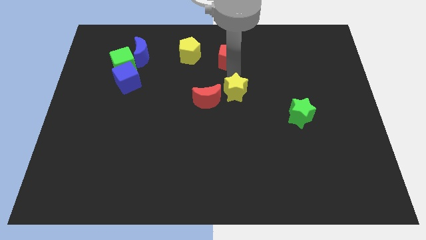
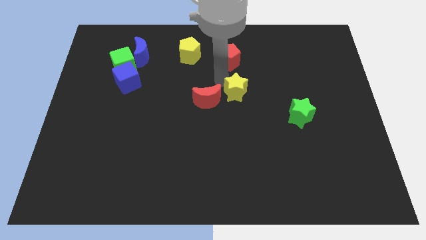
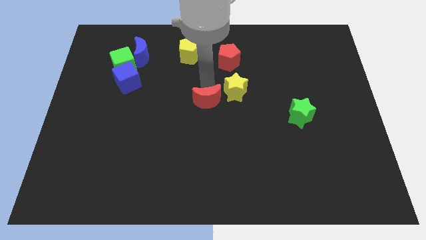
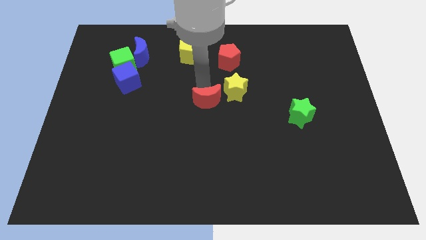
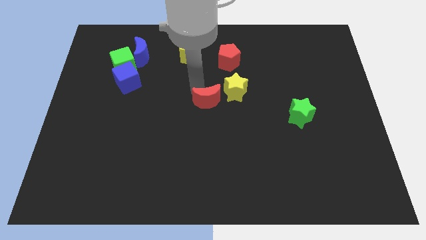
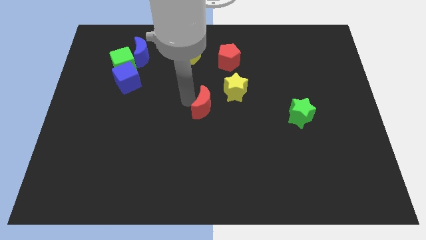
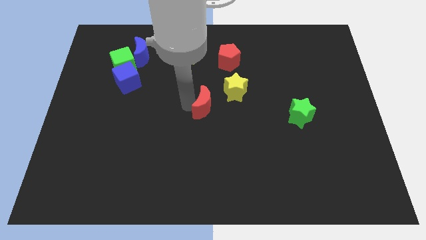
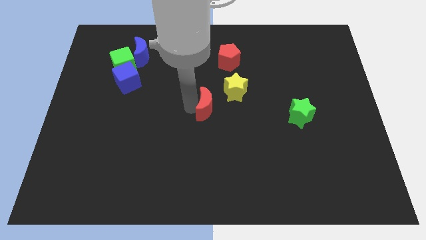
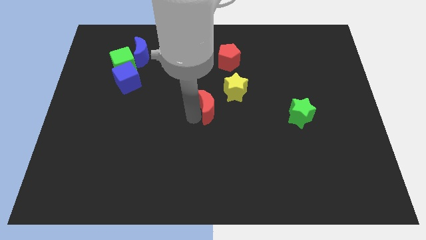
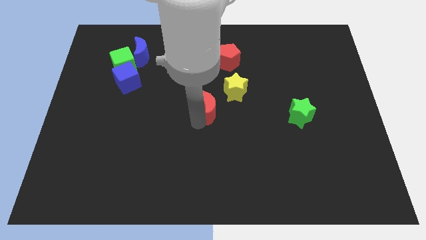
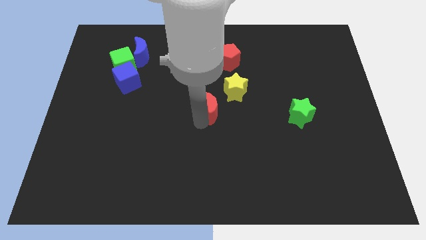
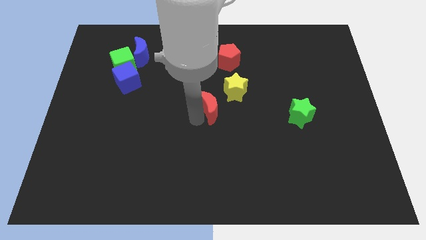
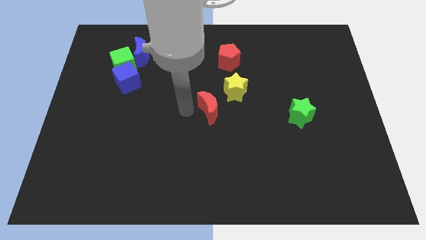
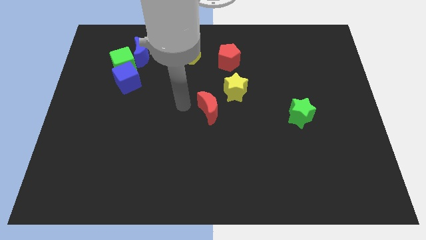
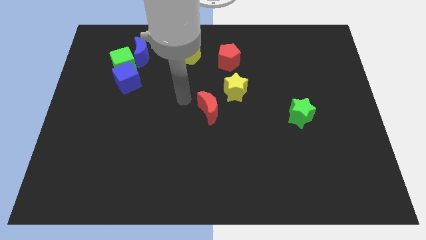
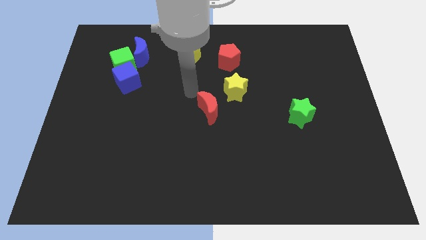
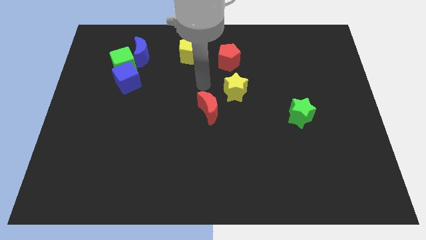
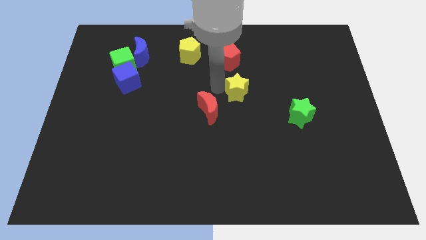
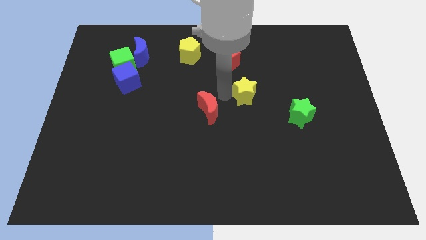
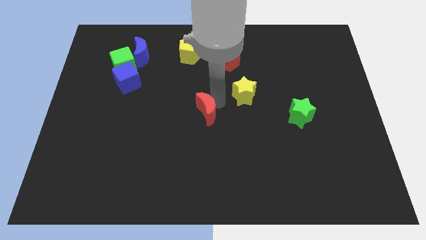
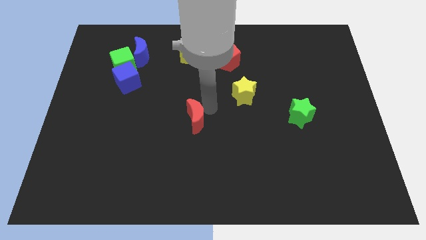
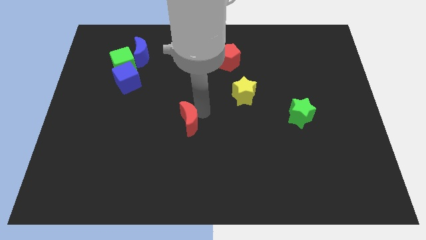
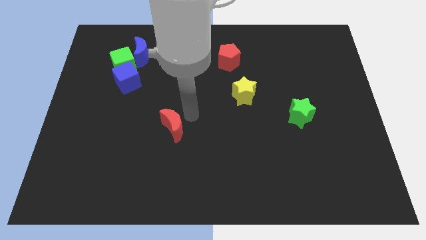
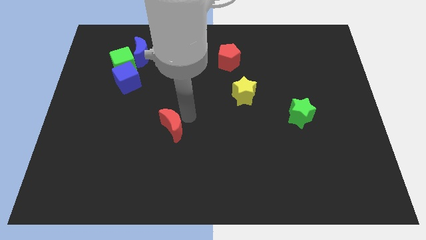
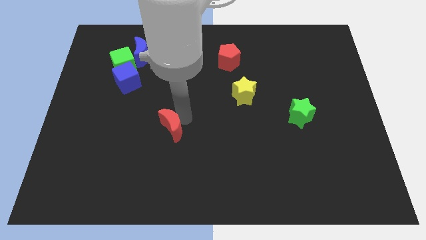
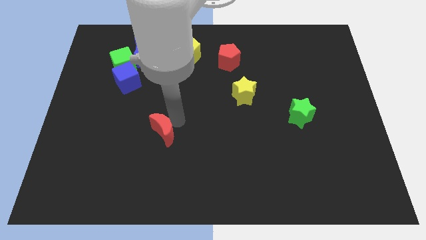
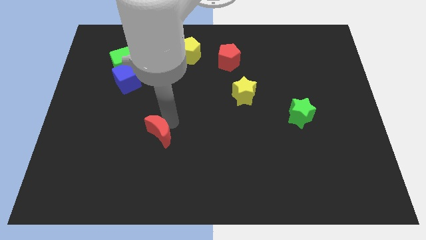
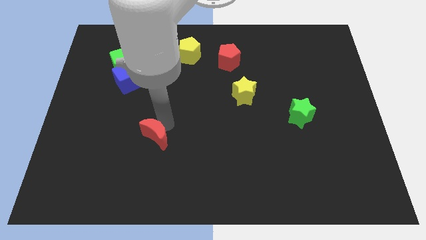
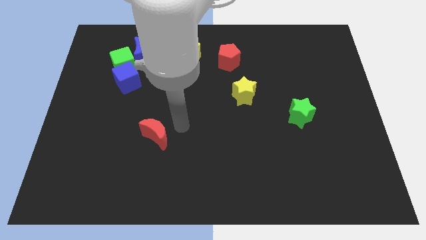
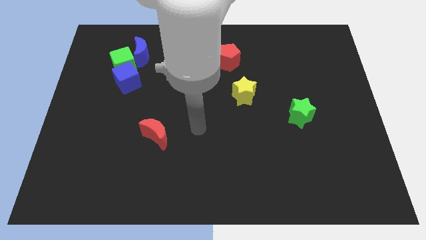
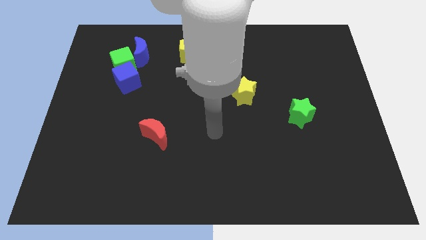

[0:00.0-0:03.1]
push the red crescent towards the left bottom of the board

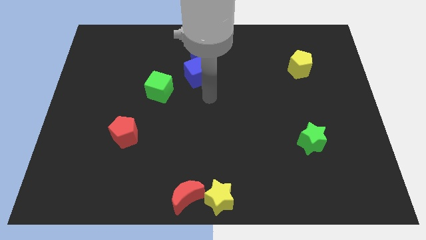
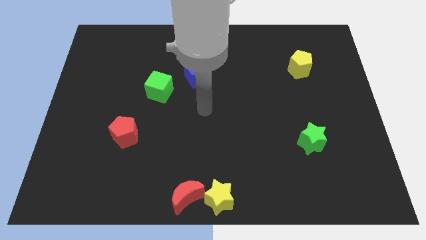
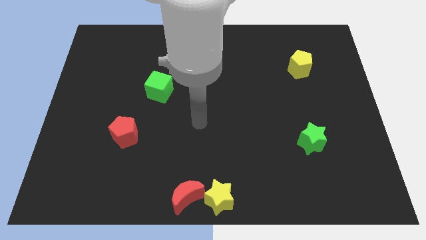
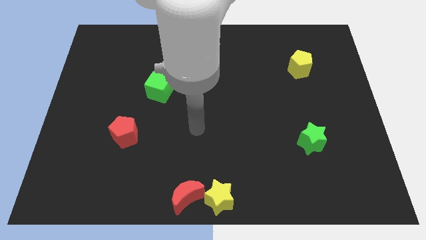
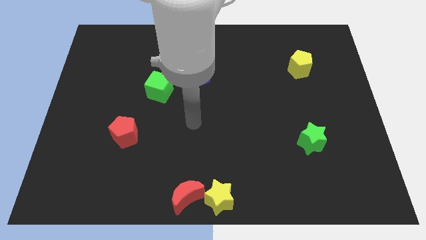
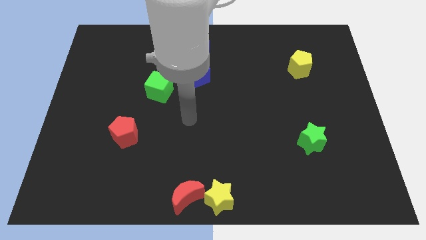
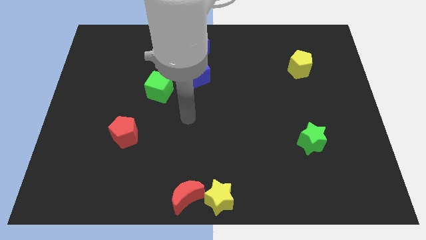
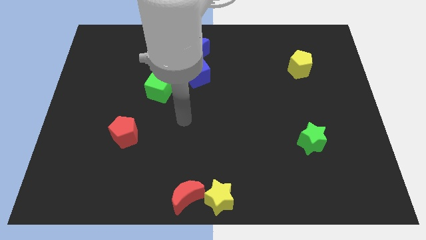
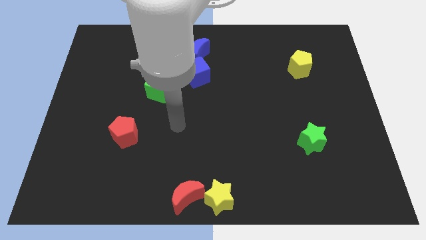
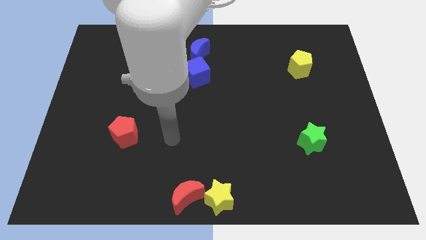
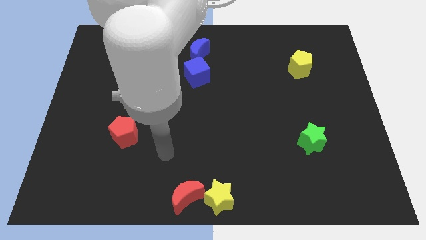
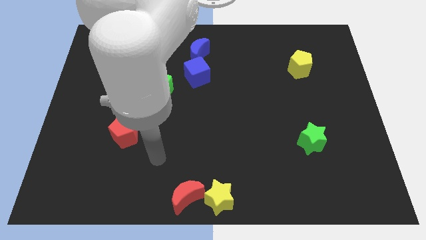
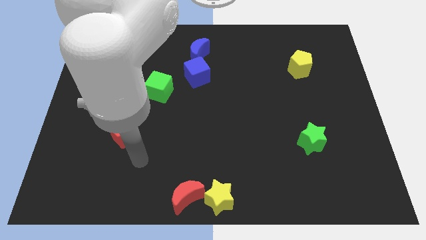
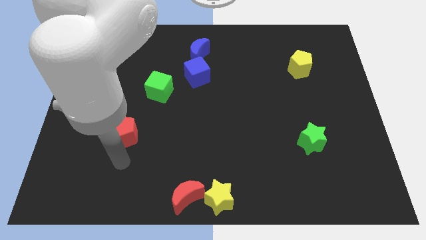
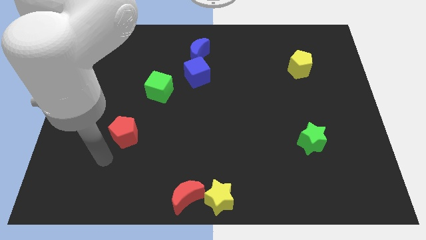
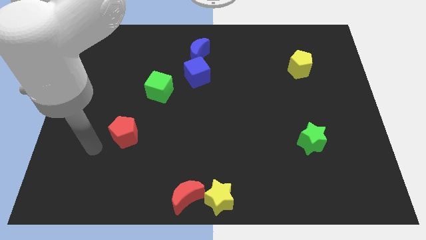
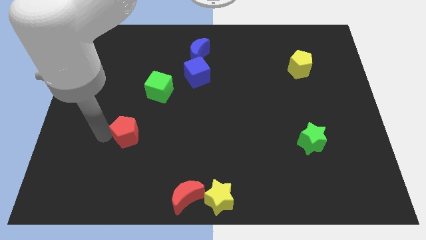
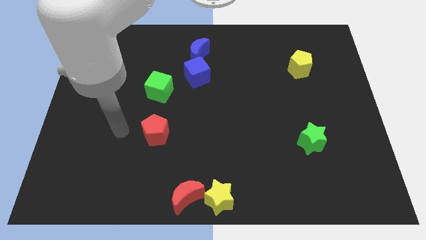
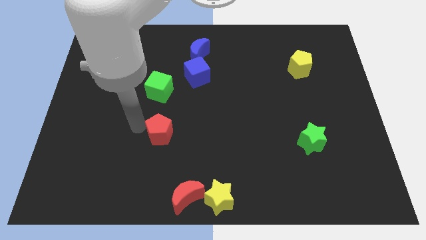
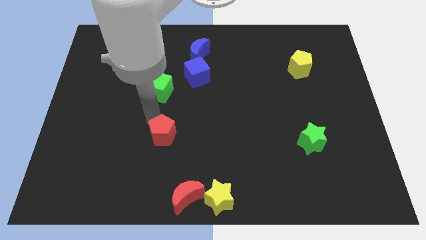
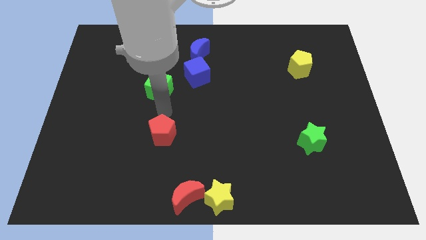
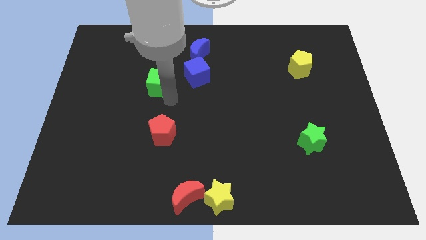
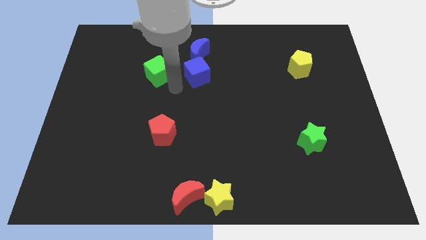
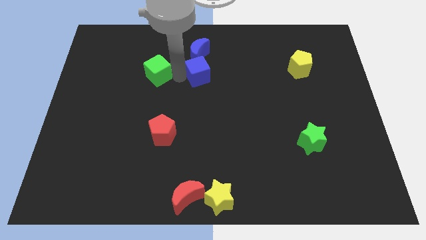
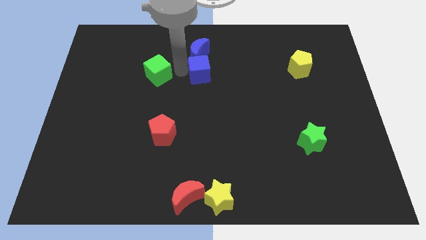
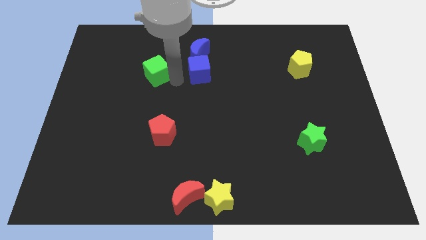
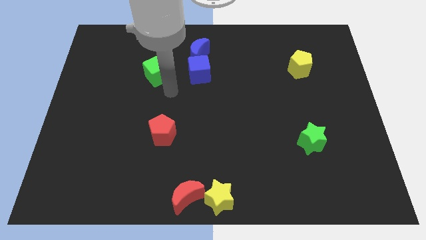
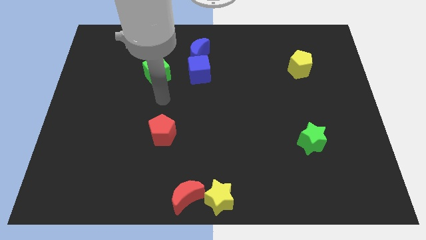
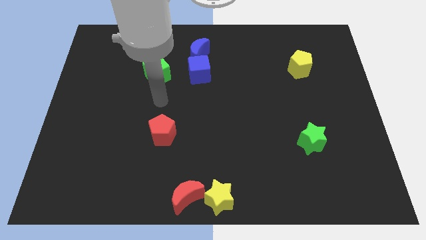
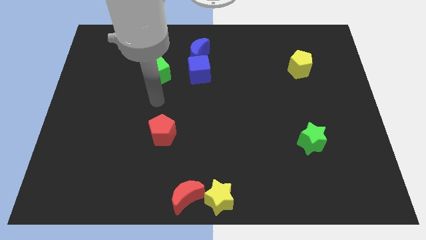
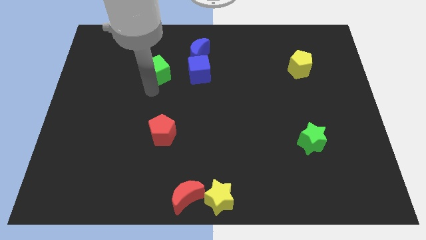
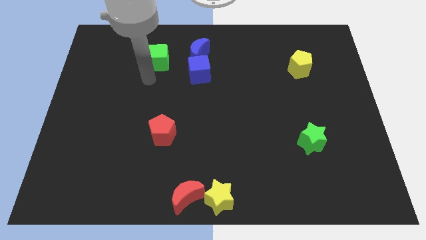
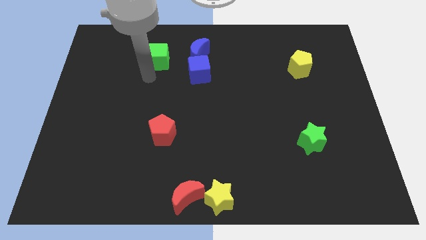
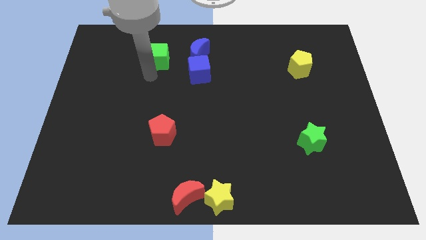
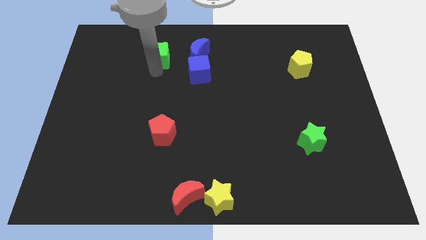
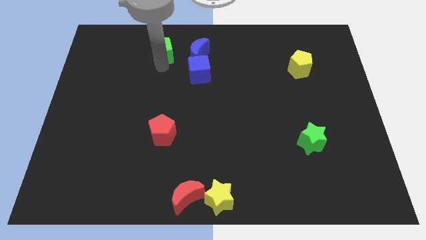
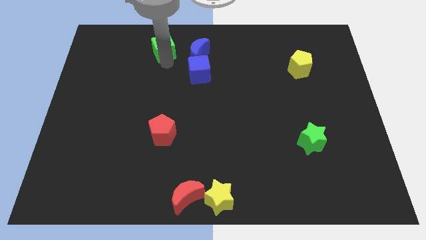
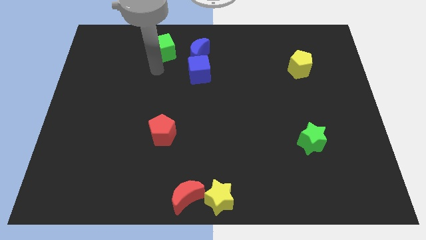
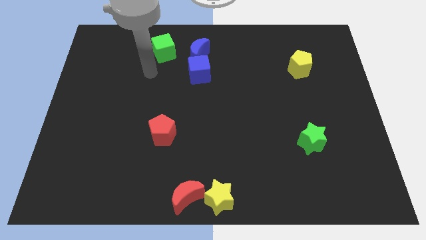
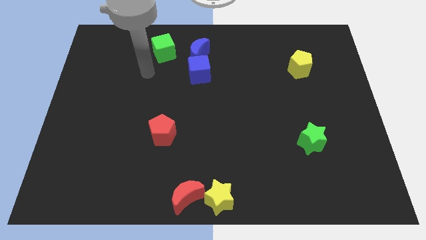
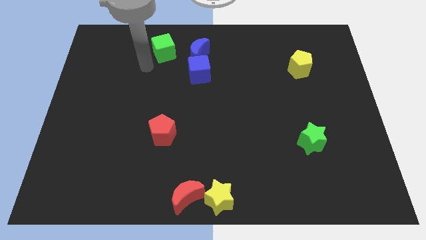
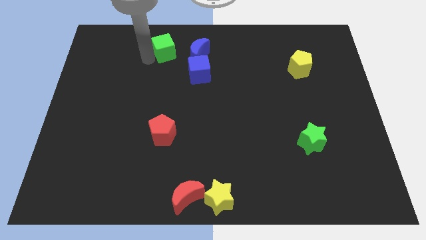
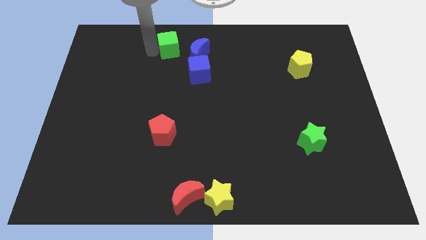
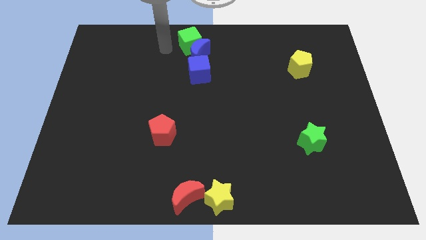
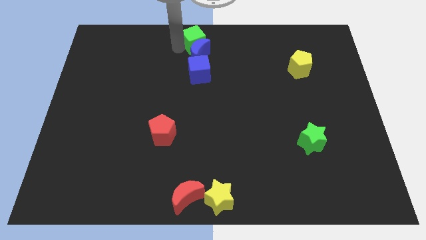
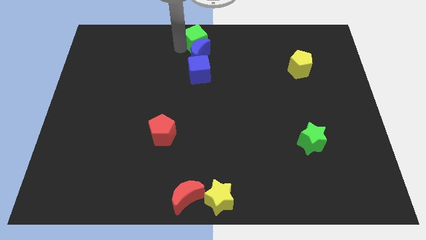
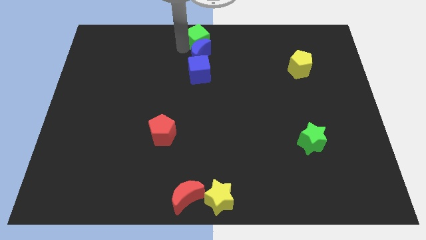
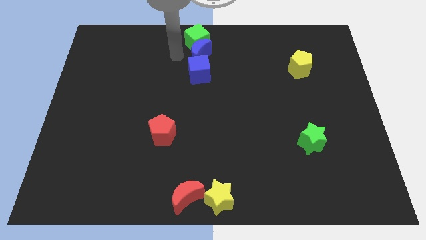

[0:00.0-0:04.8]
move the green cube into the top side of the blue crescent

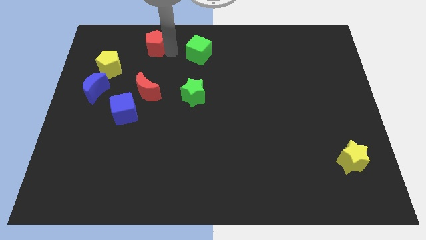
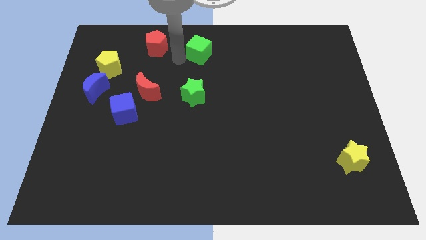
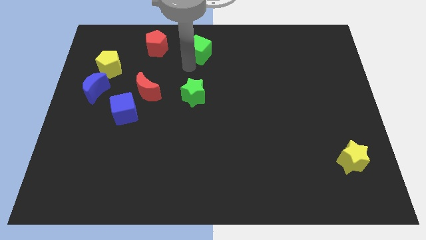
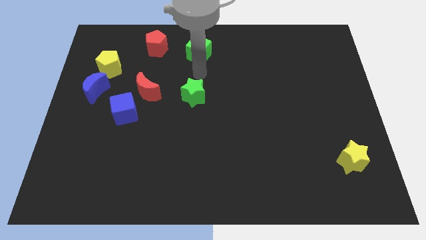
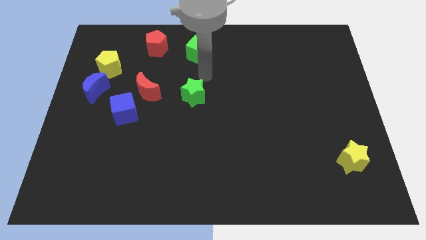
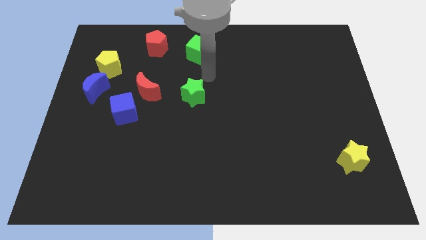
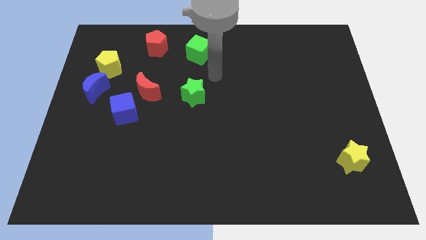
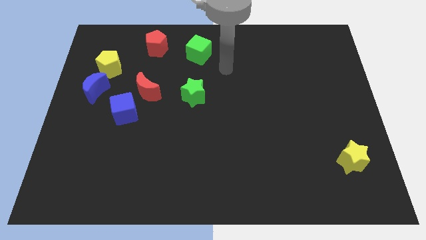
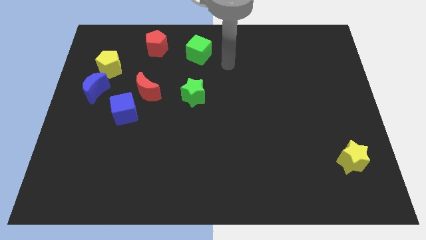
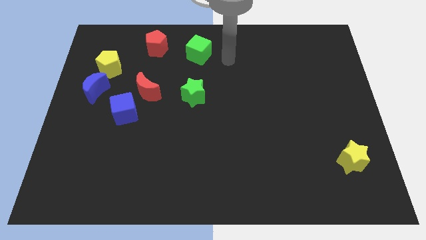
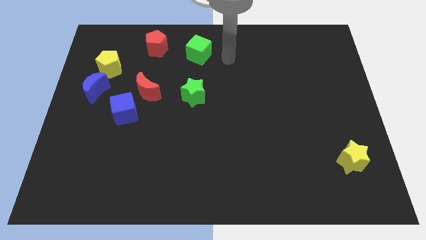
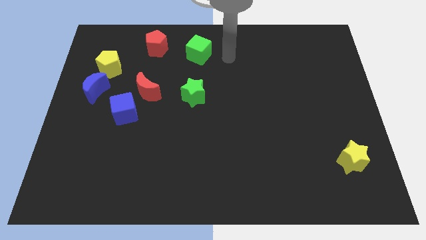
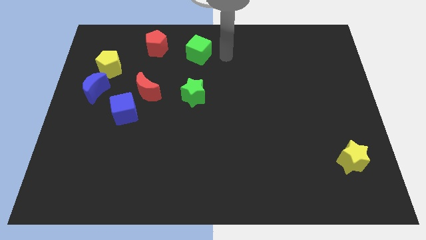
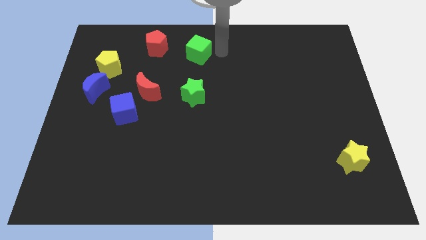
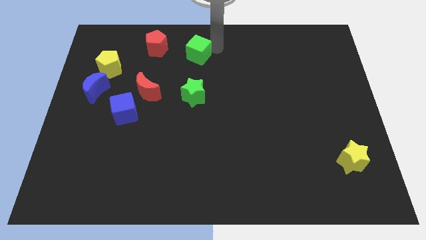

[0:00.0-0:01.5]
move your arm to the right of green cube
